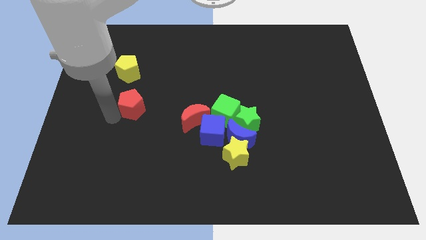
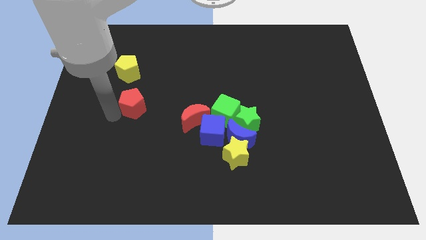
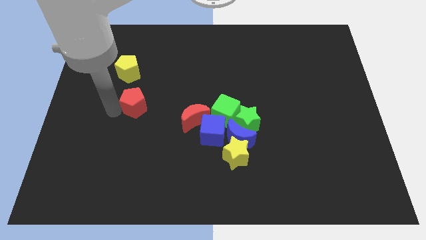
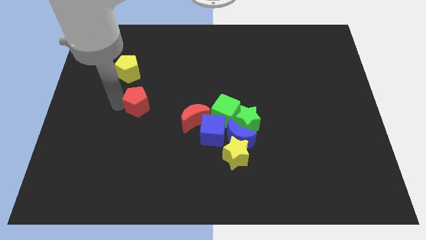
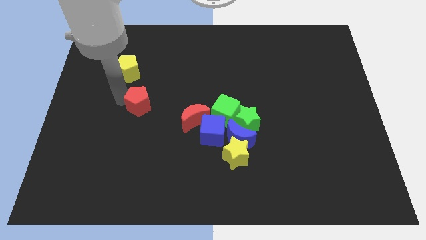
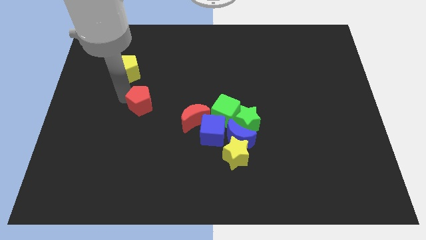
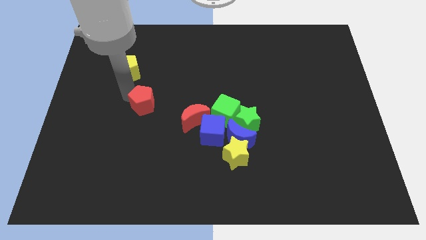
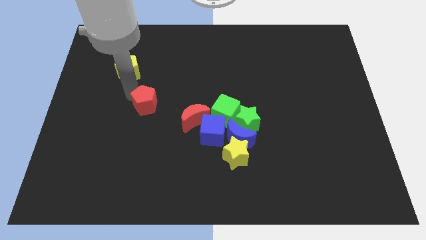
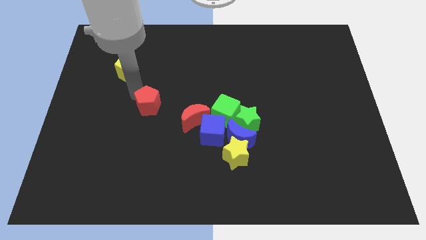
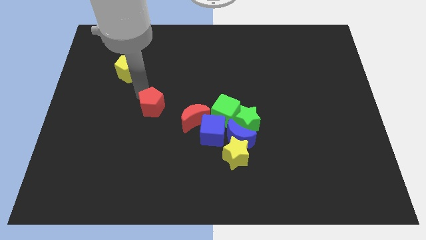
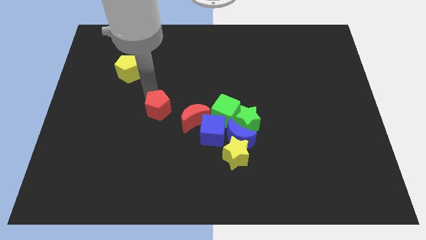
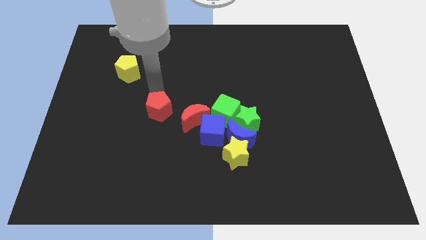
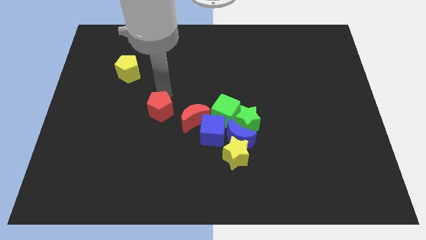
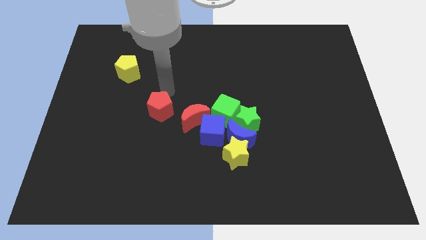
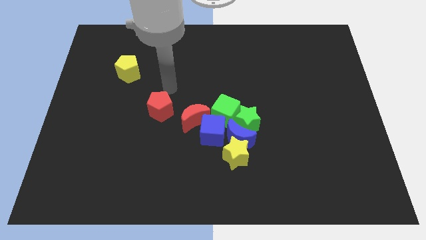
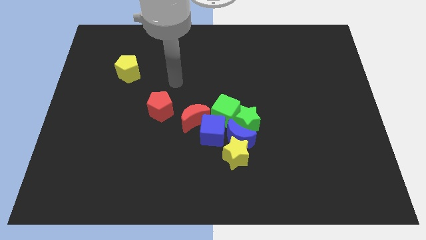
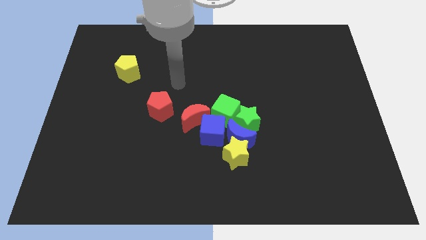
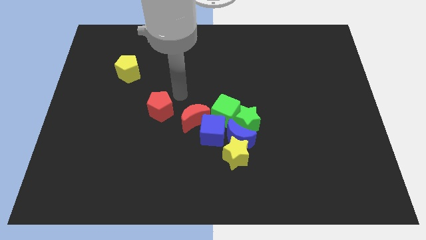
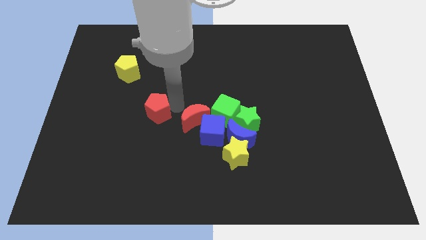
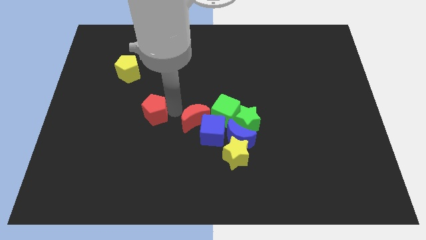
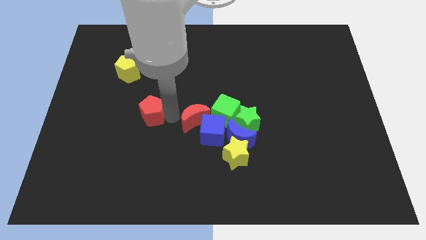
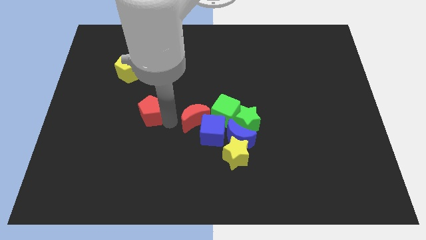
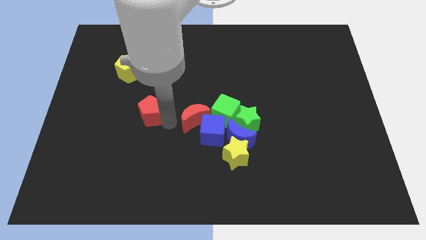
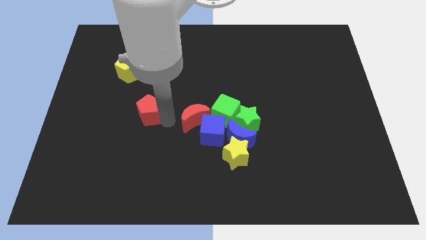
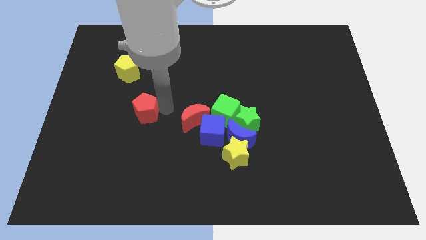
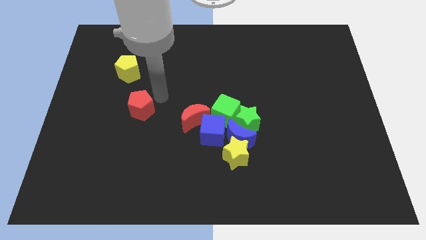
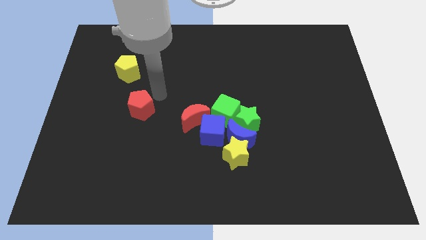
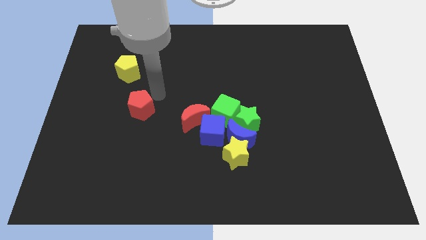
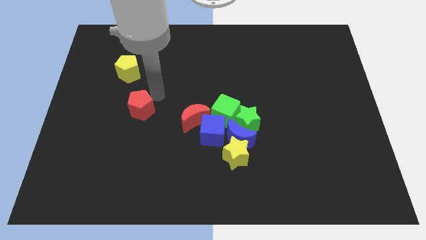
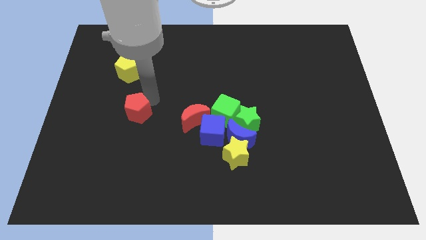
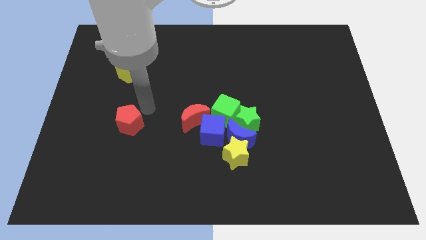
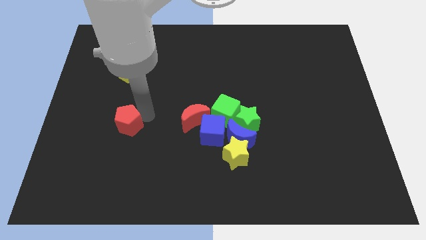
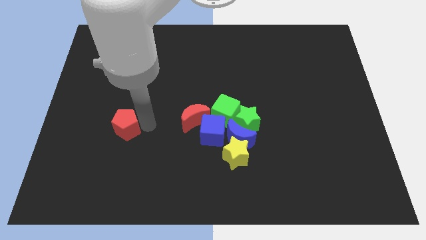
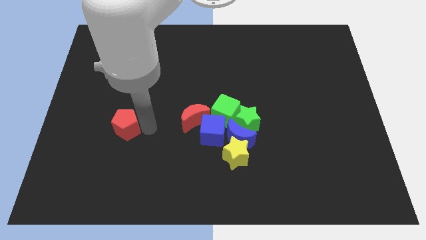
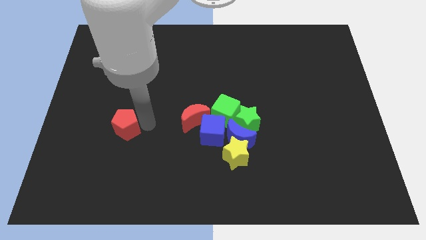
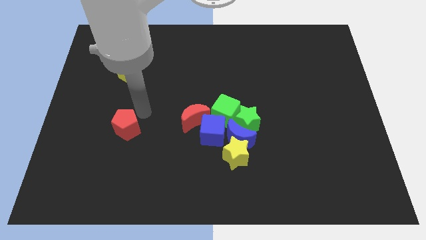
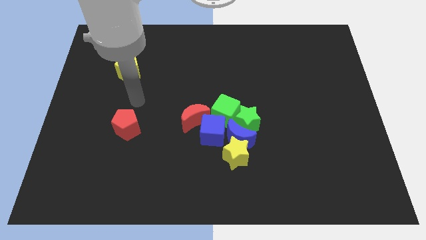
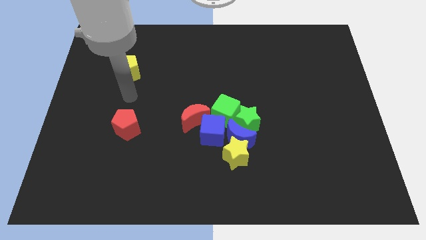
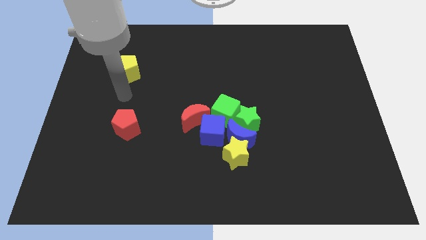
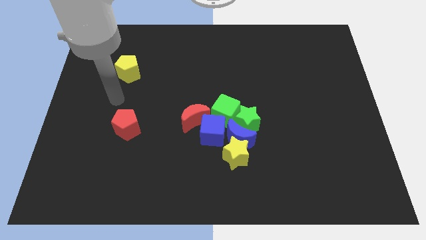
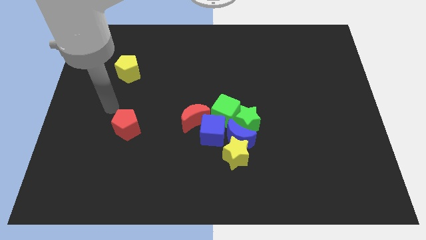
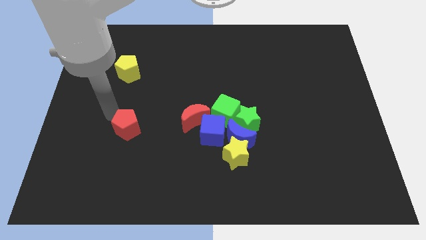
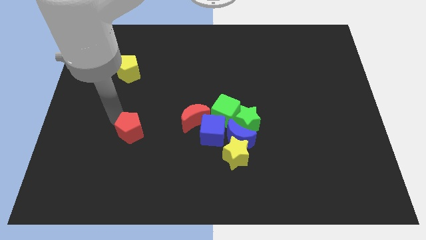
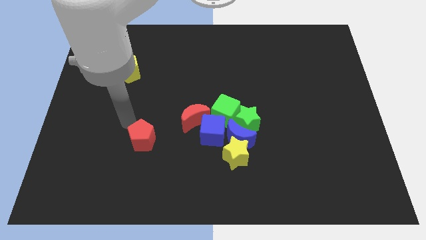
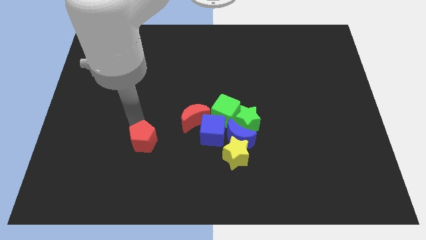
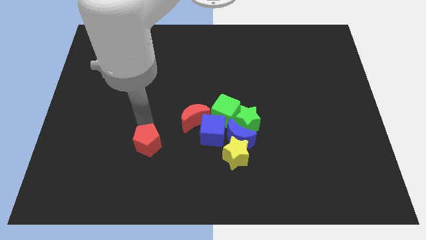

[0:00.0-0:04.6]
place the red pentagon diagonally bottom left to red moon

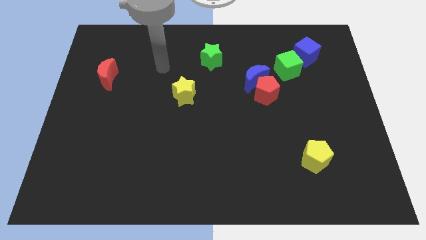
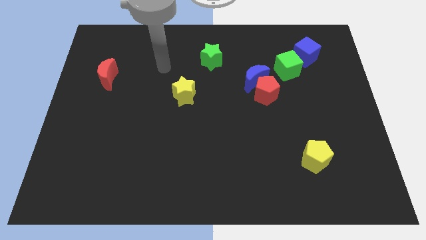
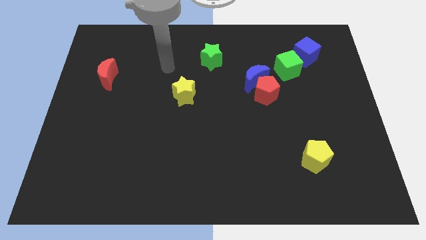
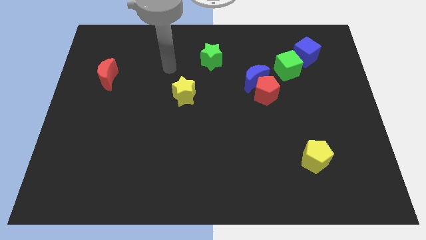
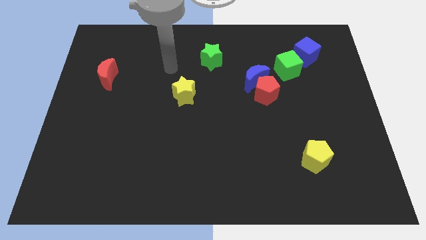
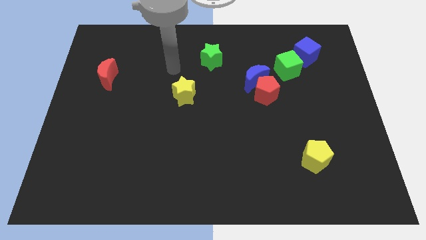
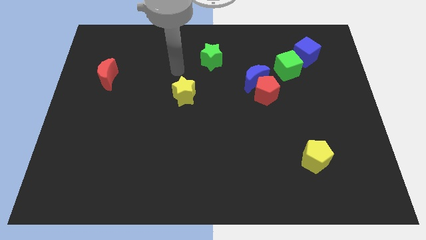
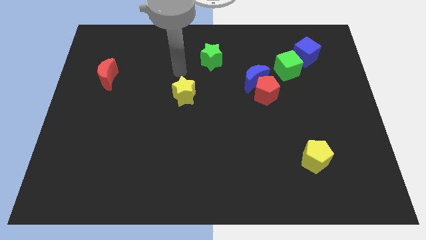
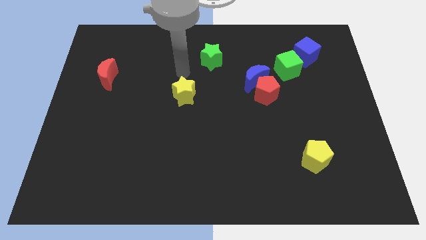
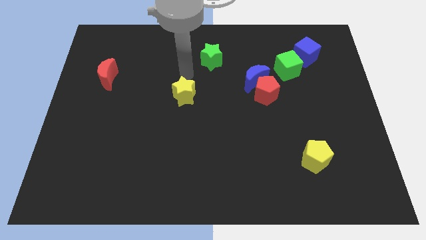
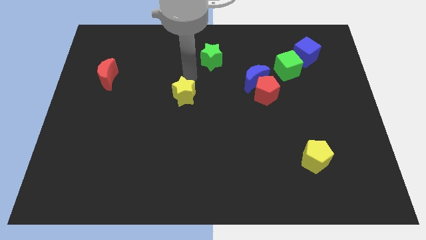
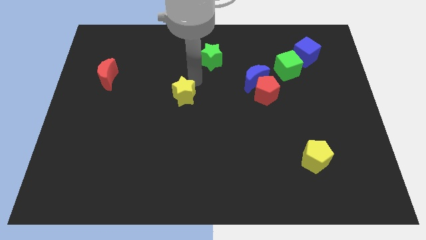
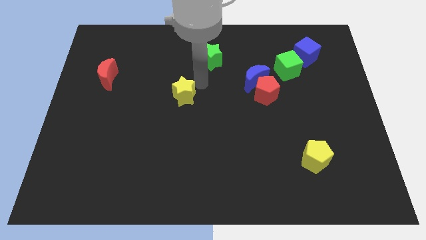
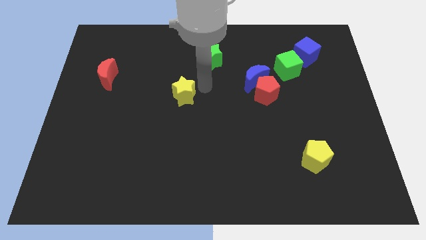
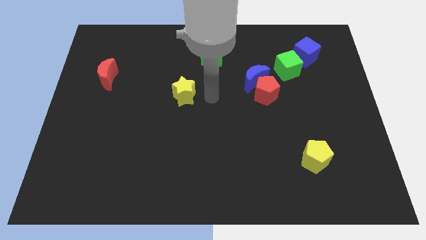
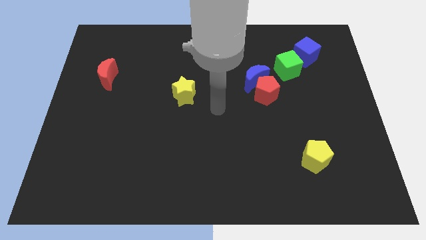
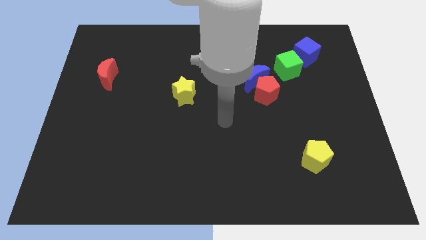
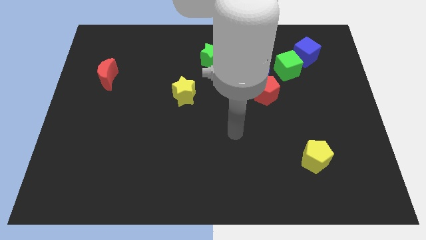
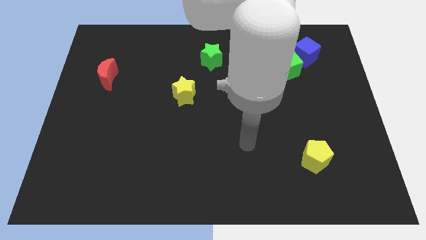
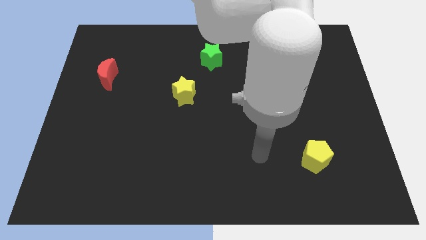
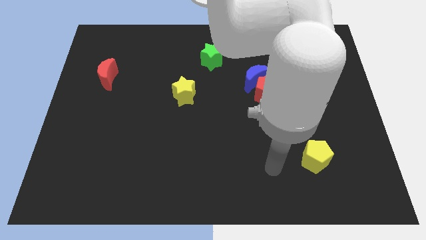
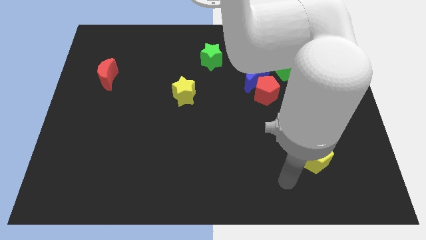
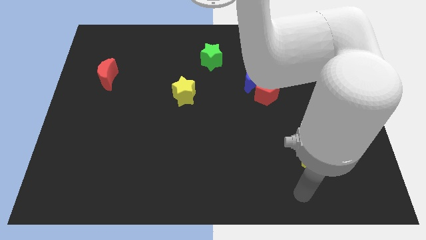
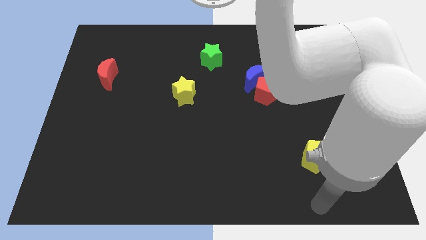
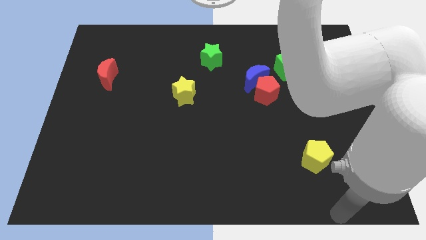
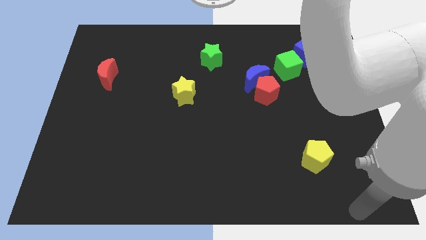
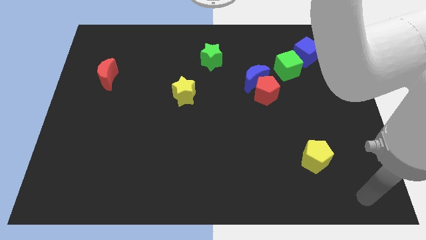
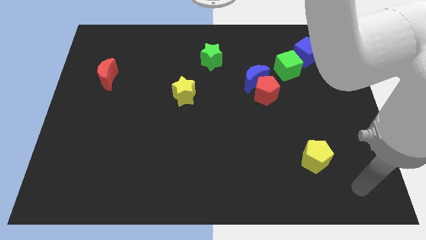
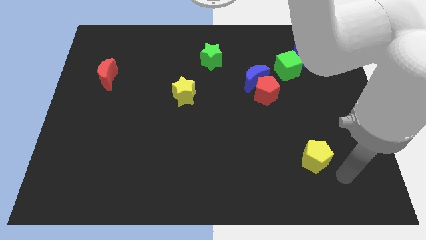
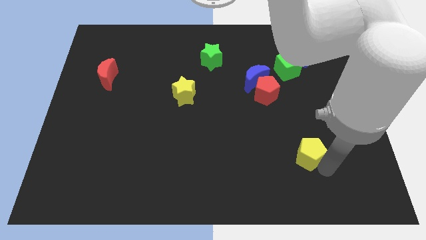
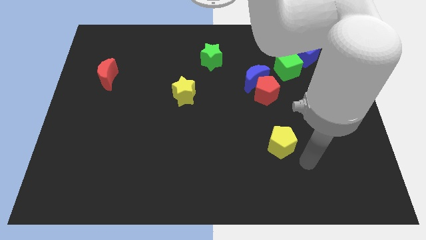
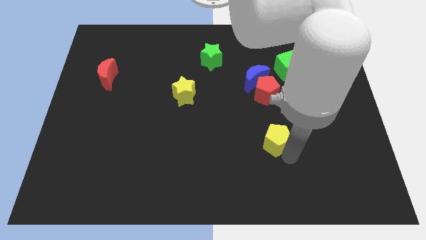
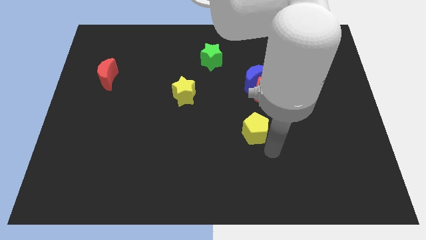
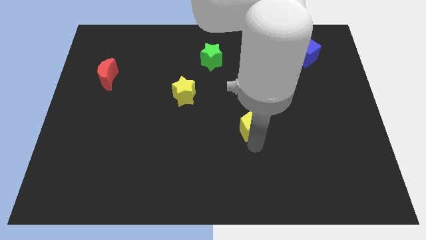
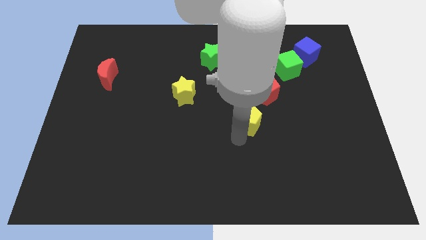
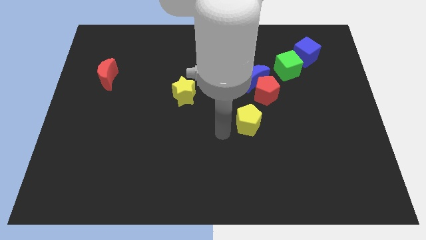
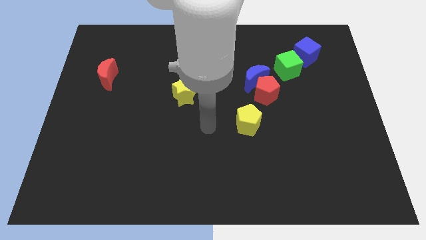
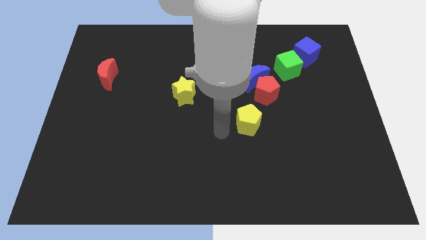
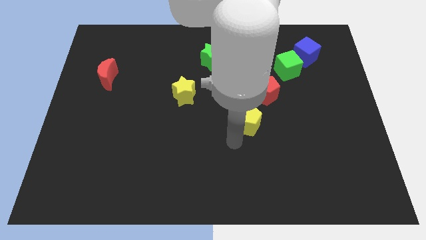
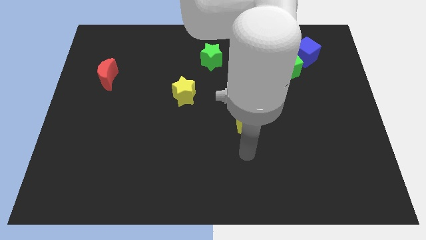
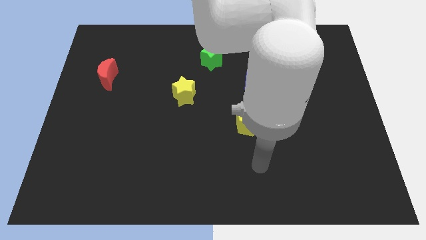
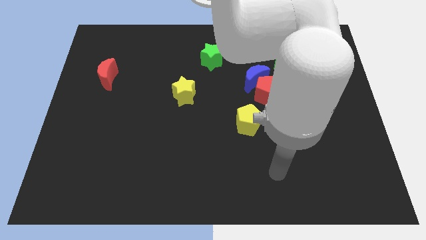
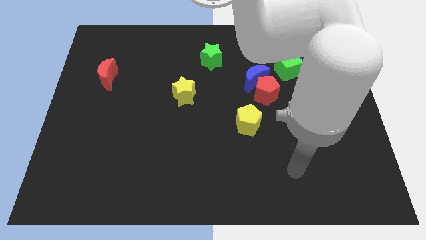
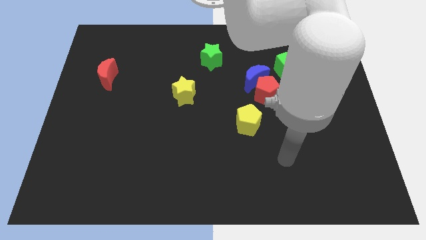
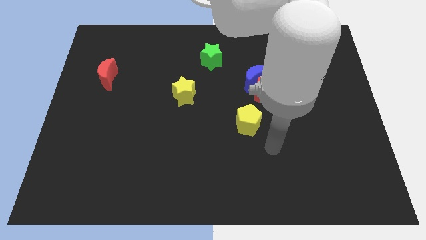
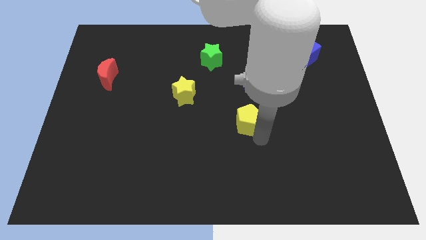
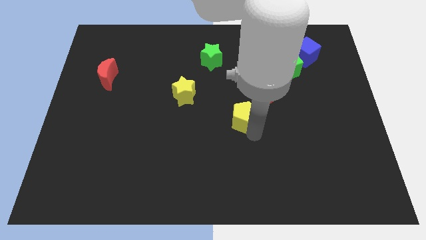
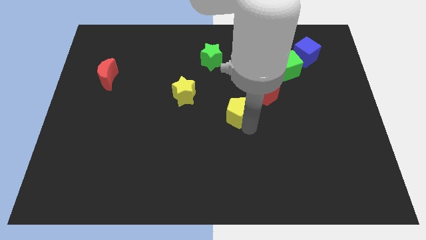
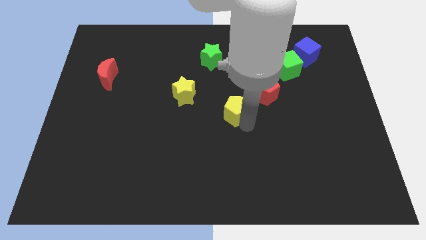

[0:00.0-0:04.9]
move the yellow pentagon to the bottom left of the red pentagon
